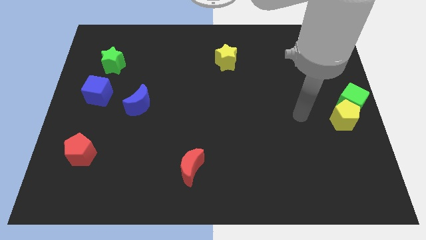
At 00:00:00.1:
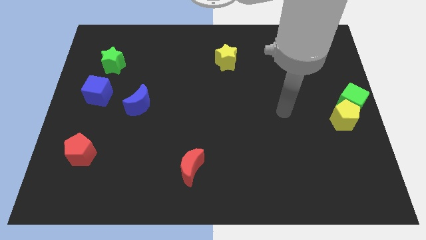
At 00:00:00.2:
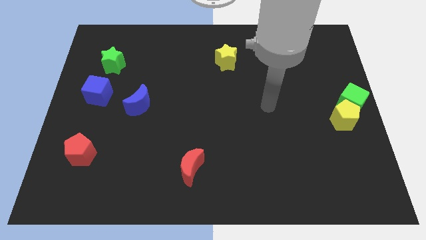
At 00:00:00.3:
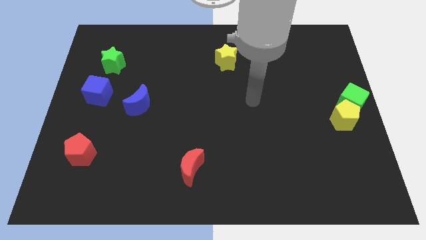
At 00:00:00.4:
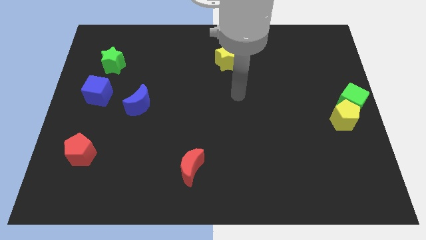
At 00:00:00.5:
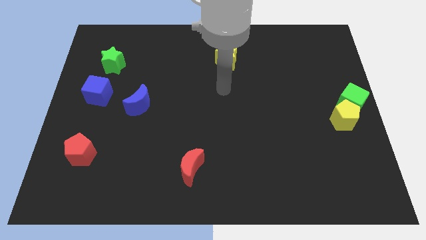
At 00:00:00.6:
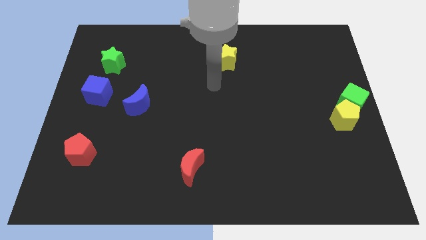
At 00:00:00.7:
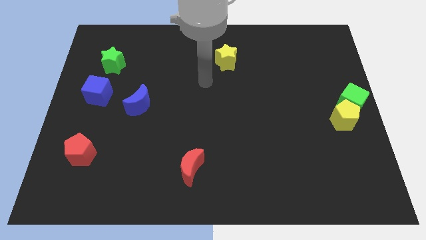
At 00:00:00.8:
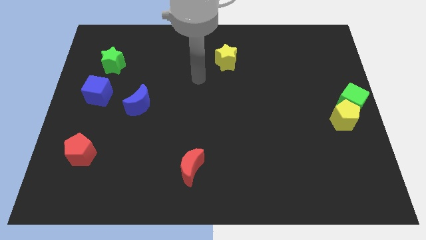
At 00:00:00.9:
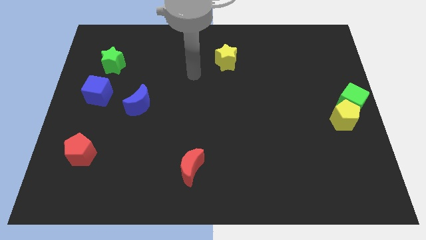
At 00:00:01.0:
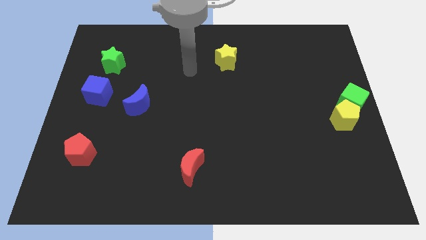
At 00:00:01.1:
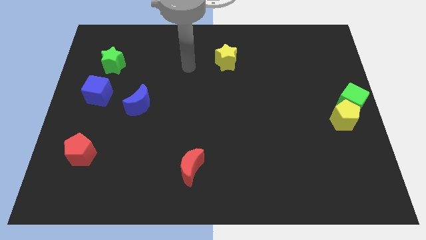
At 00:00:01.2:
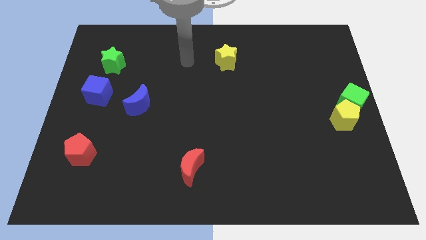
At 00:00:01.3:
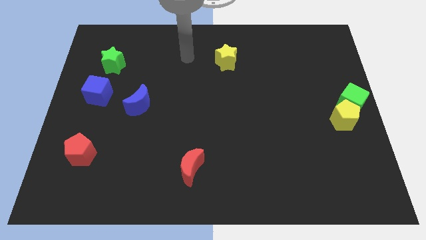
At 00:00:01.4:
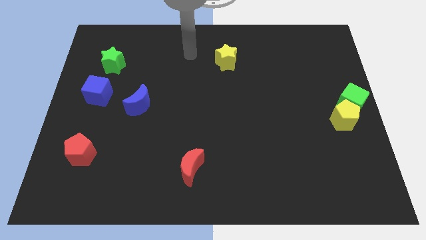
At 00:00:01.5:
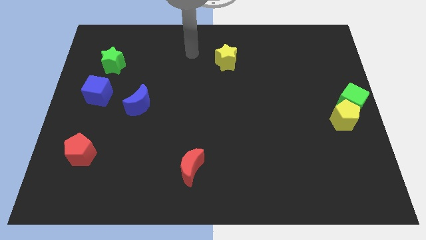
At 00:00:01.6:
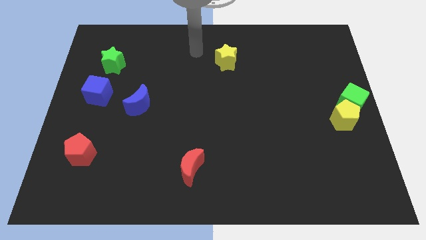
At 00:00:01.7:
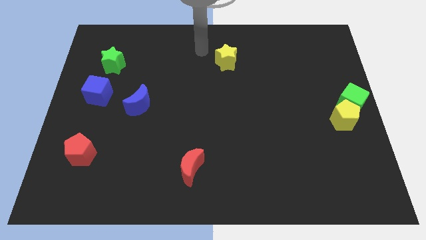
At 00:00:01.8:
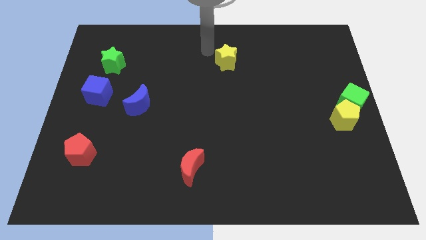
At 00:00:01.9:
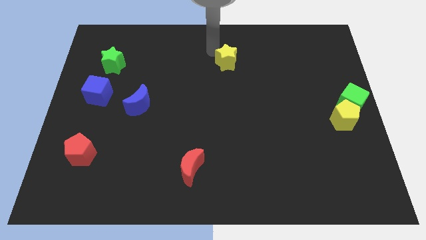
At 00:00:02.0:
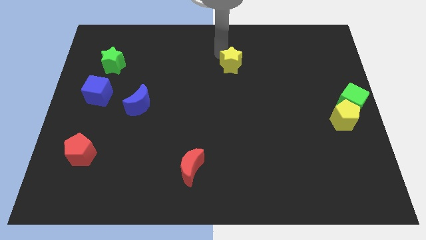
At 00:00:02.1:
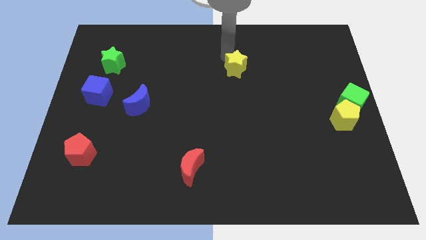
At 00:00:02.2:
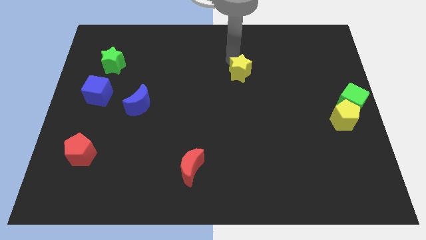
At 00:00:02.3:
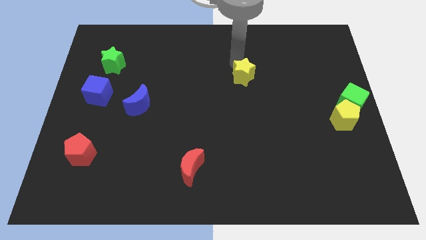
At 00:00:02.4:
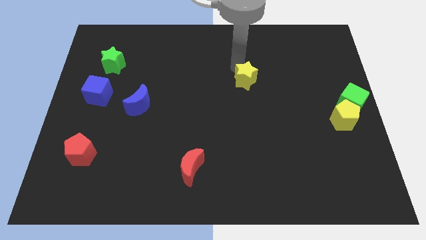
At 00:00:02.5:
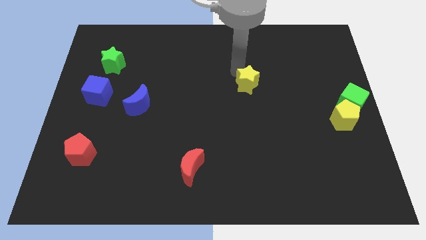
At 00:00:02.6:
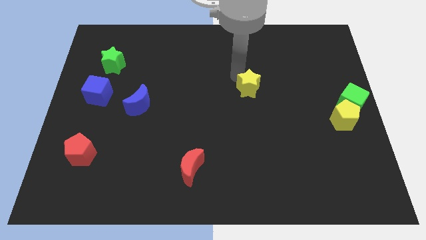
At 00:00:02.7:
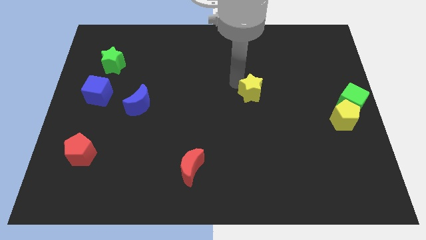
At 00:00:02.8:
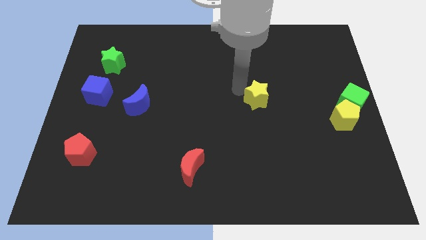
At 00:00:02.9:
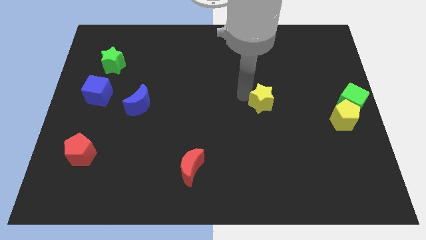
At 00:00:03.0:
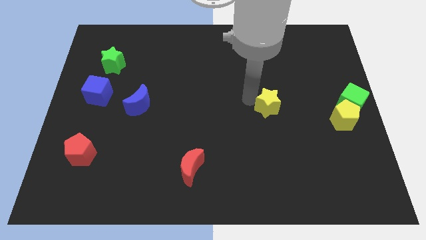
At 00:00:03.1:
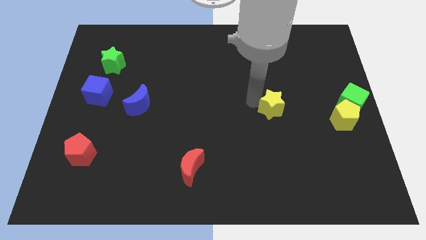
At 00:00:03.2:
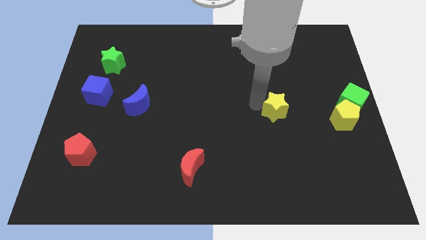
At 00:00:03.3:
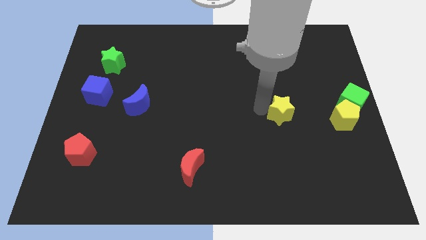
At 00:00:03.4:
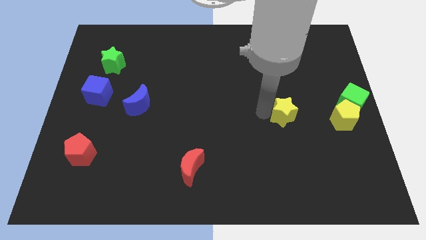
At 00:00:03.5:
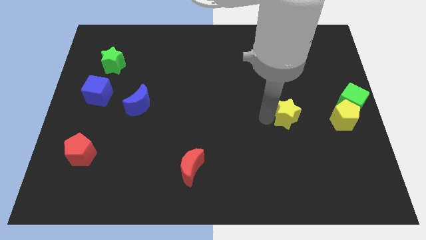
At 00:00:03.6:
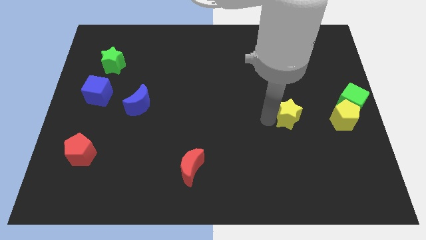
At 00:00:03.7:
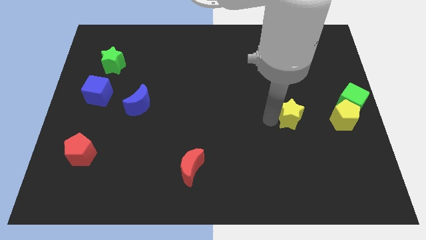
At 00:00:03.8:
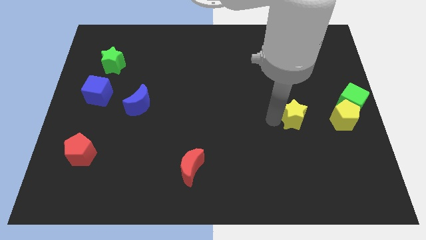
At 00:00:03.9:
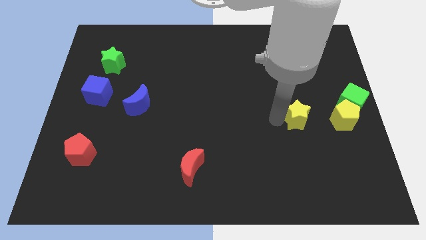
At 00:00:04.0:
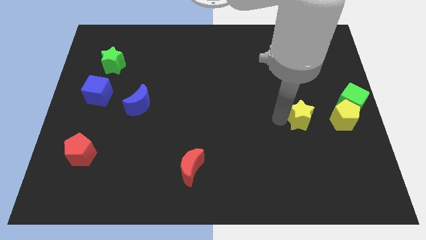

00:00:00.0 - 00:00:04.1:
place the yellow star left to the yellow pentagon

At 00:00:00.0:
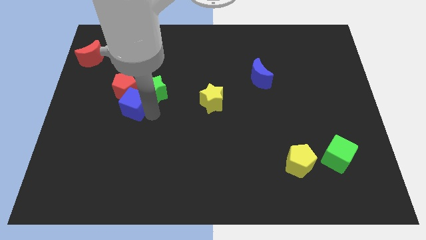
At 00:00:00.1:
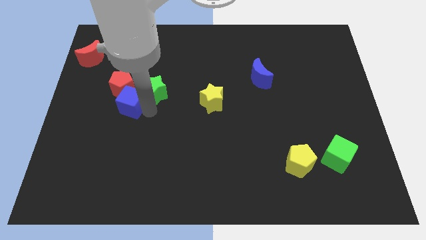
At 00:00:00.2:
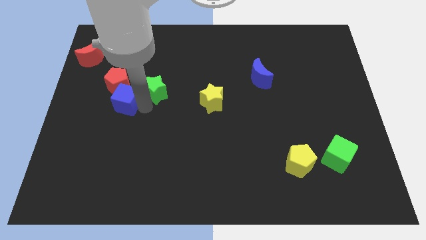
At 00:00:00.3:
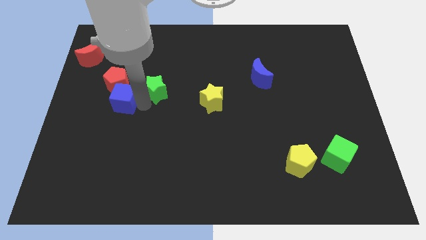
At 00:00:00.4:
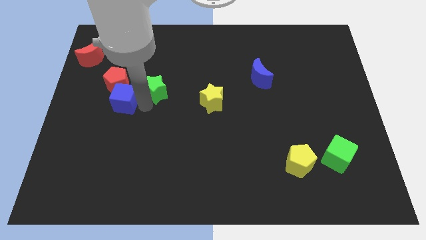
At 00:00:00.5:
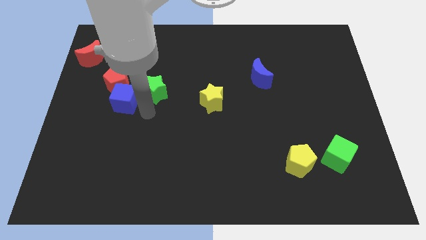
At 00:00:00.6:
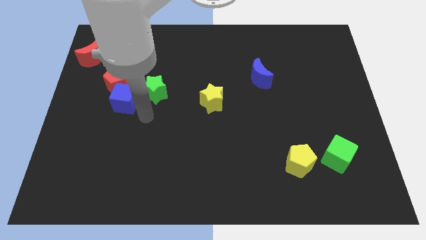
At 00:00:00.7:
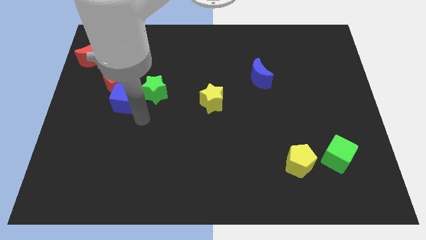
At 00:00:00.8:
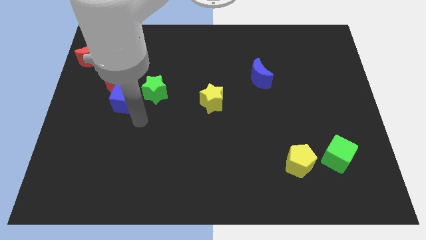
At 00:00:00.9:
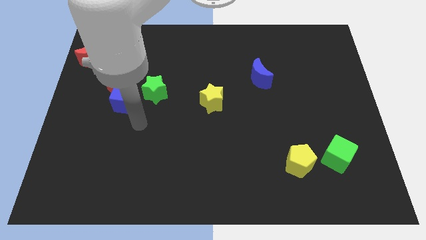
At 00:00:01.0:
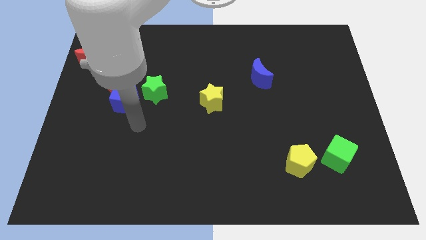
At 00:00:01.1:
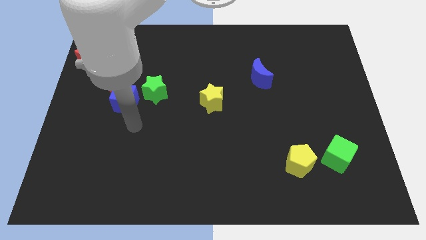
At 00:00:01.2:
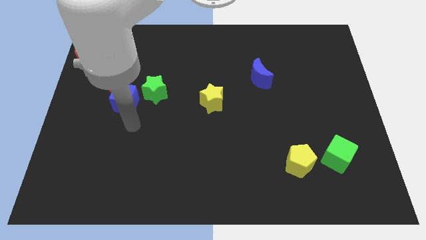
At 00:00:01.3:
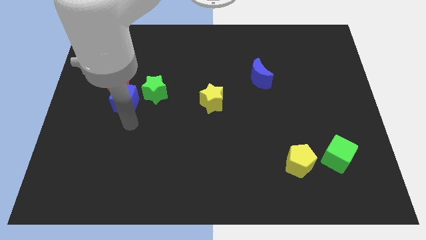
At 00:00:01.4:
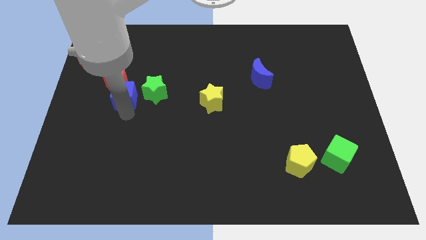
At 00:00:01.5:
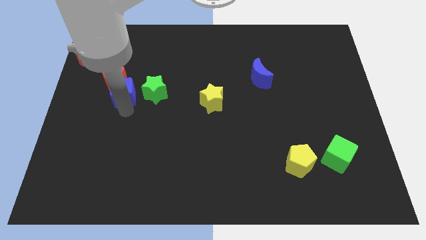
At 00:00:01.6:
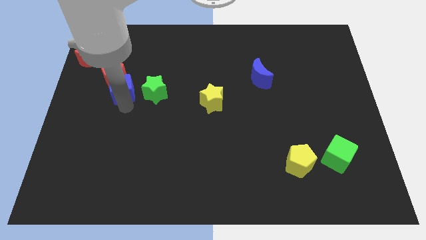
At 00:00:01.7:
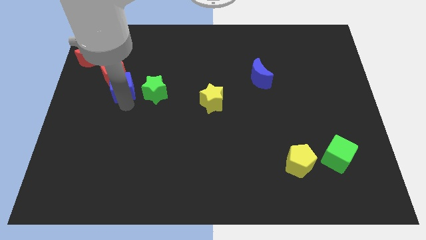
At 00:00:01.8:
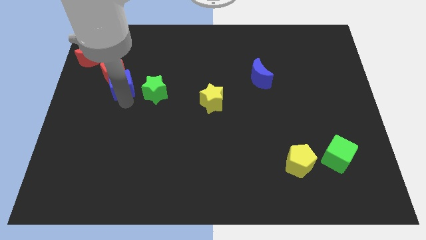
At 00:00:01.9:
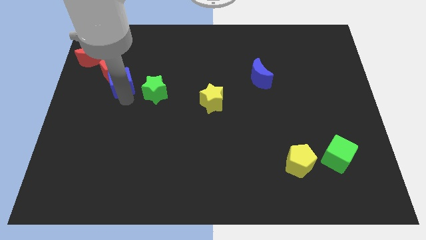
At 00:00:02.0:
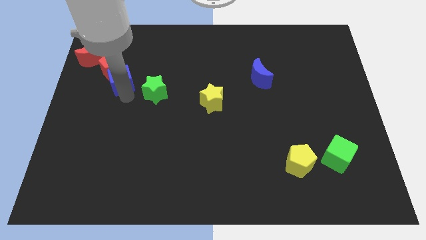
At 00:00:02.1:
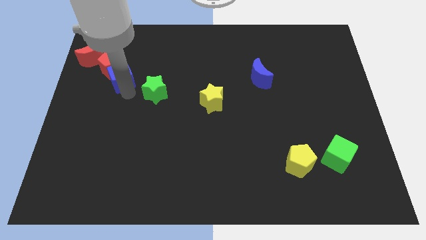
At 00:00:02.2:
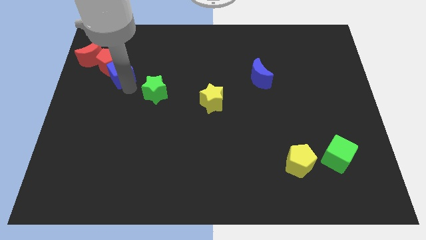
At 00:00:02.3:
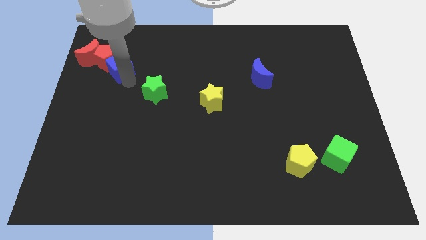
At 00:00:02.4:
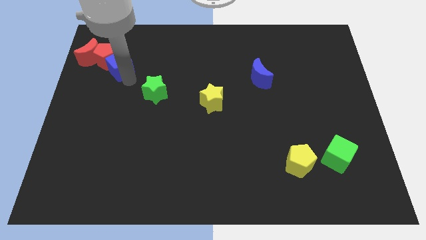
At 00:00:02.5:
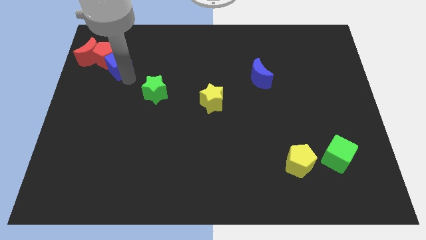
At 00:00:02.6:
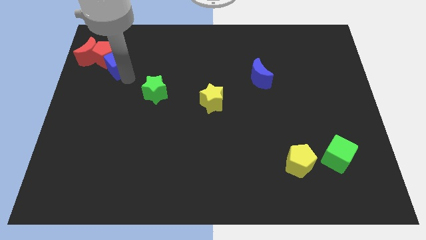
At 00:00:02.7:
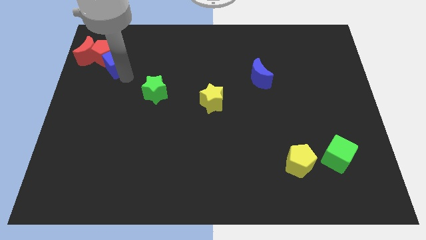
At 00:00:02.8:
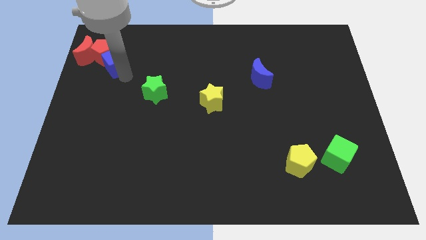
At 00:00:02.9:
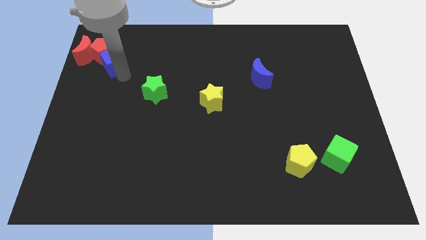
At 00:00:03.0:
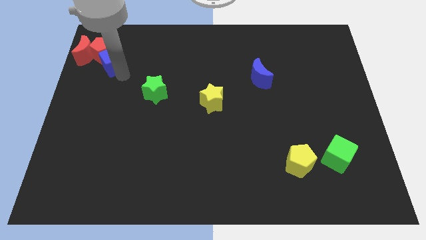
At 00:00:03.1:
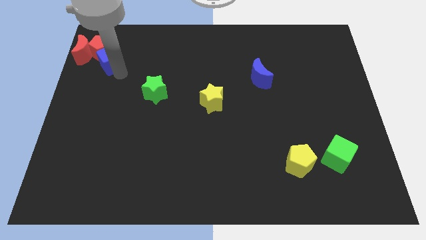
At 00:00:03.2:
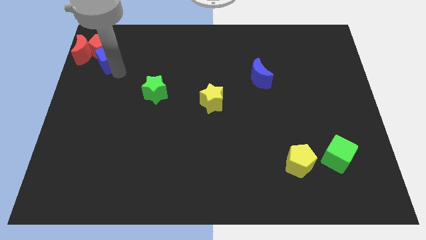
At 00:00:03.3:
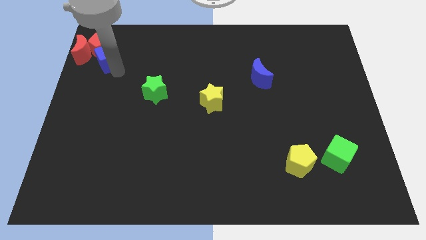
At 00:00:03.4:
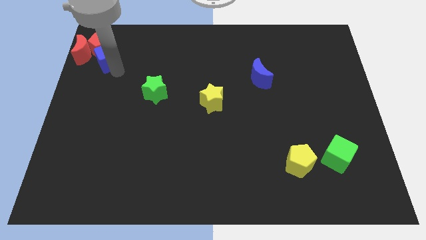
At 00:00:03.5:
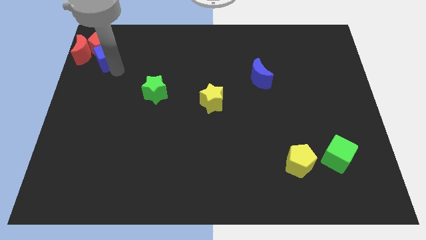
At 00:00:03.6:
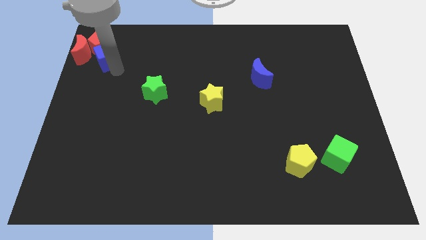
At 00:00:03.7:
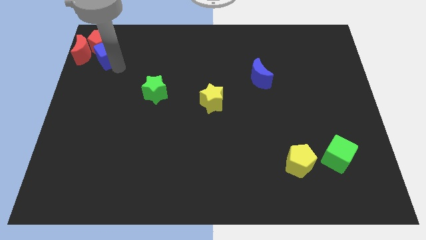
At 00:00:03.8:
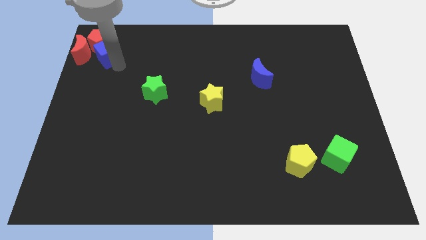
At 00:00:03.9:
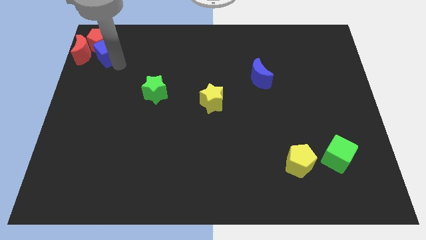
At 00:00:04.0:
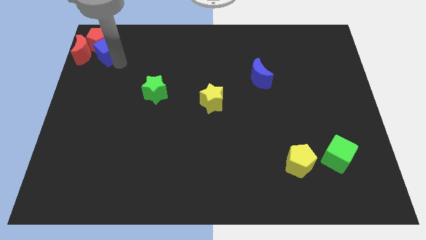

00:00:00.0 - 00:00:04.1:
slide blue cube along with red pentagon into red moon

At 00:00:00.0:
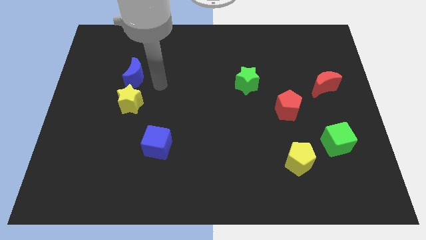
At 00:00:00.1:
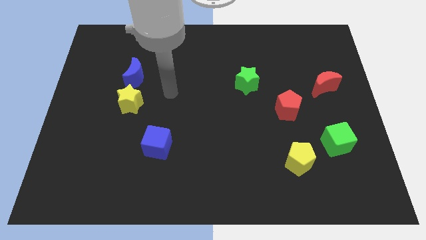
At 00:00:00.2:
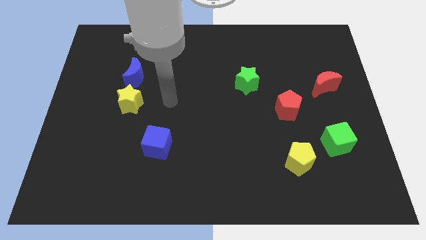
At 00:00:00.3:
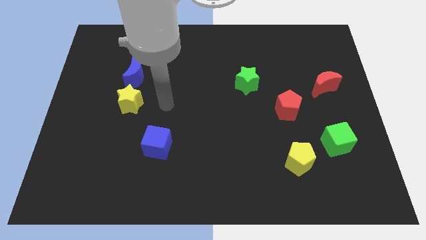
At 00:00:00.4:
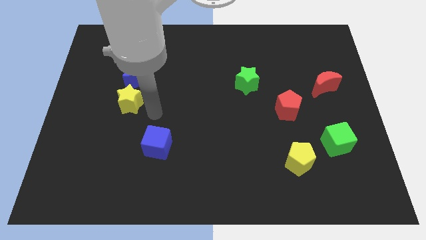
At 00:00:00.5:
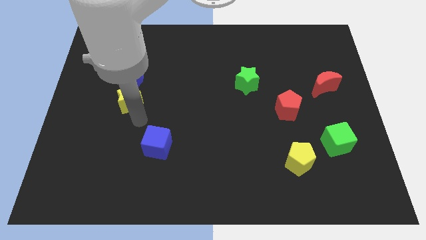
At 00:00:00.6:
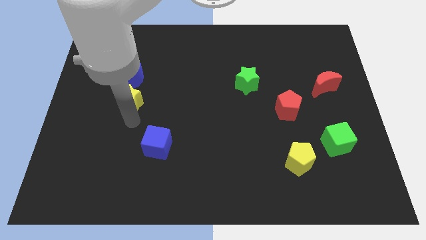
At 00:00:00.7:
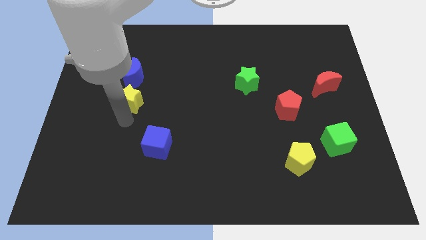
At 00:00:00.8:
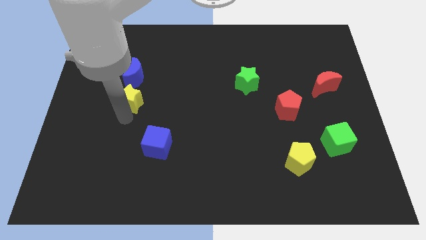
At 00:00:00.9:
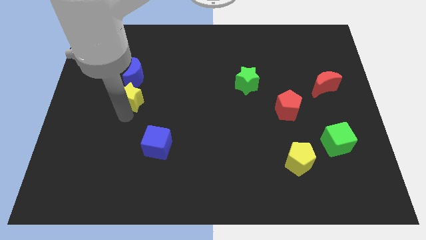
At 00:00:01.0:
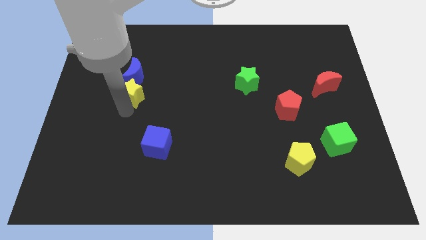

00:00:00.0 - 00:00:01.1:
move your arm at the bottom of yellow star
